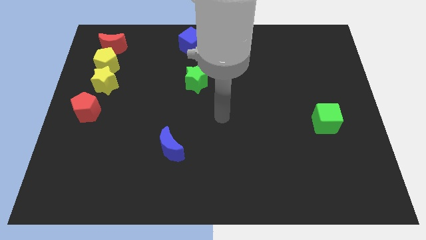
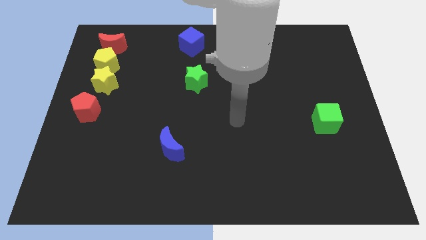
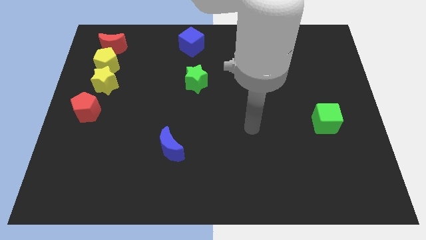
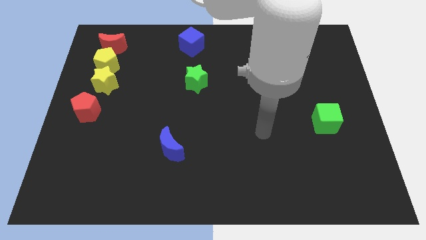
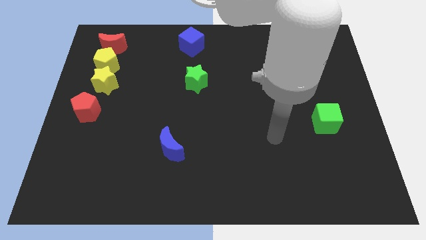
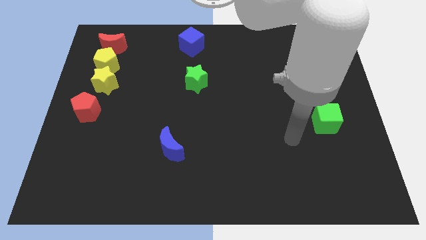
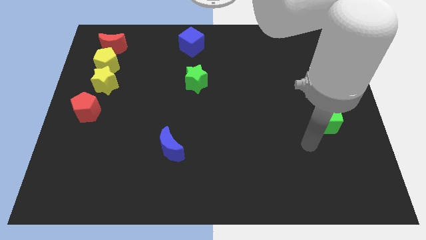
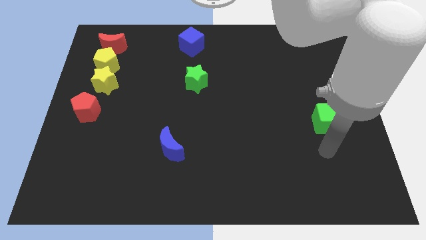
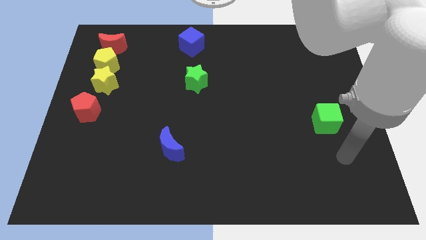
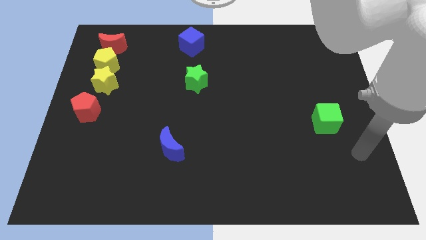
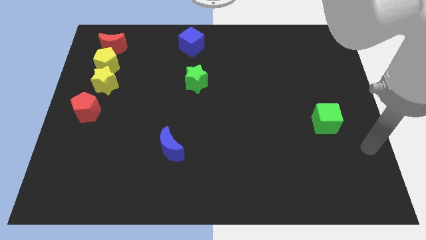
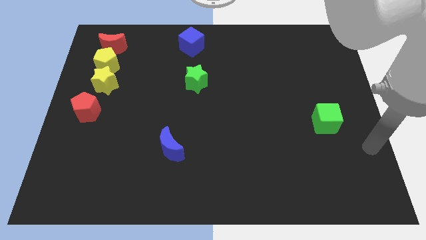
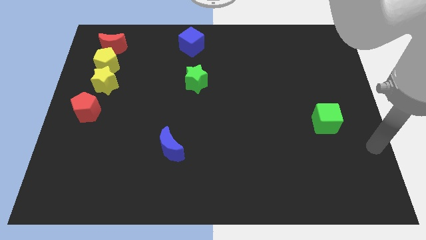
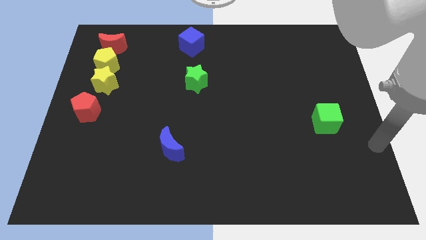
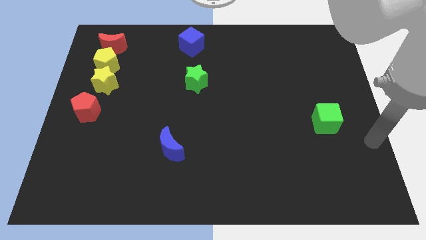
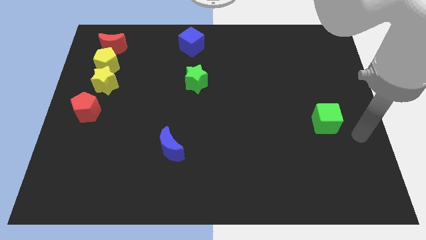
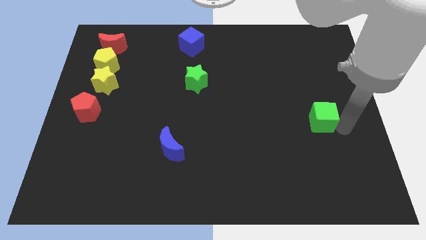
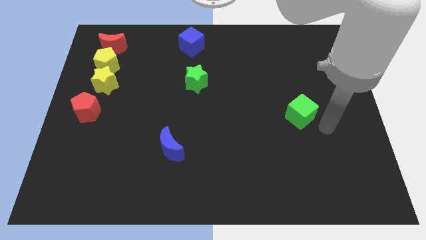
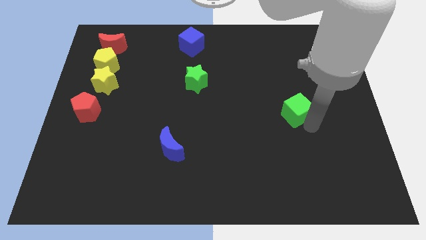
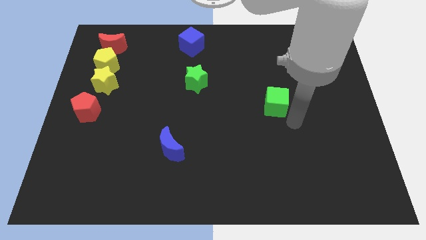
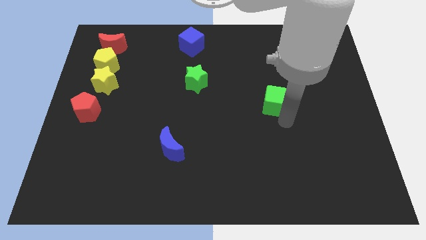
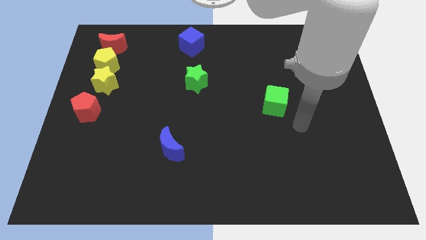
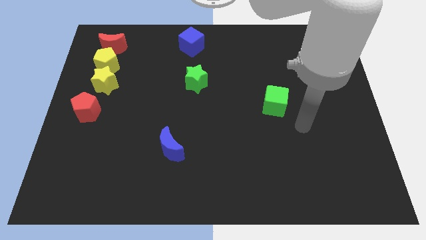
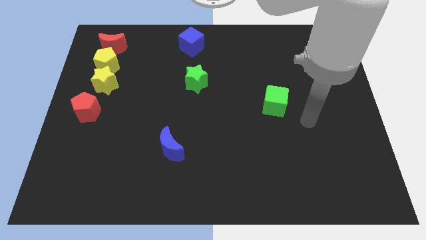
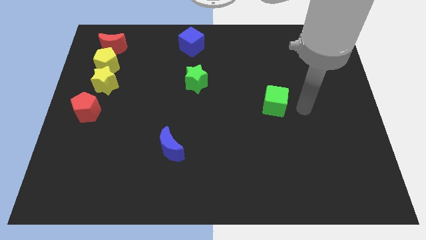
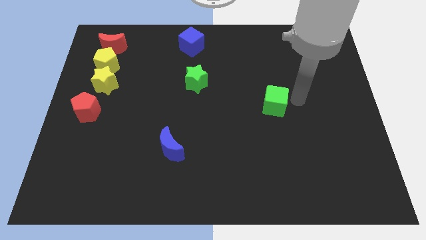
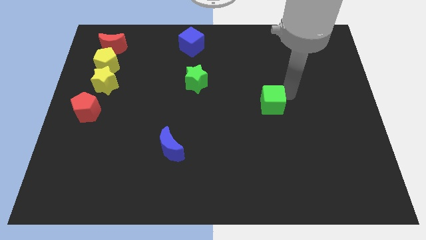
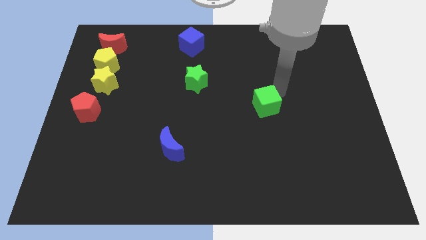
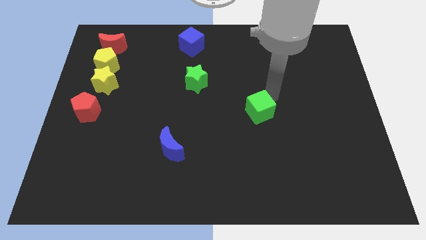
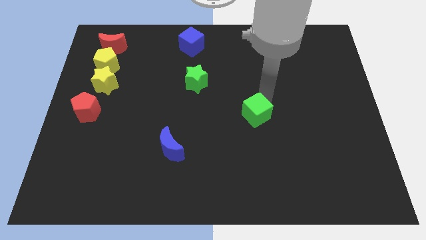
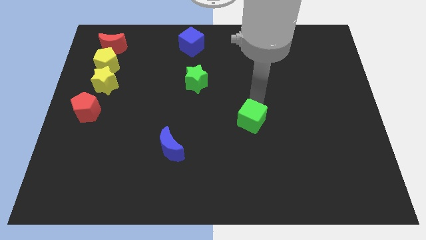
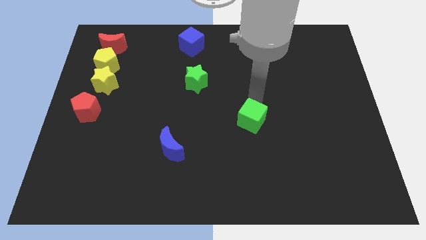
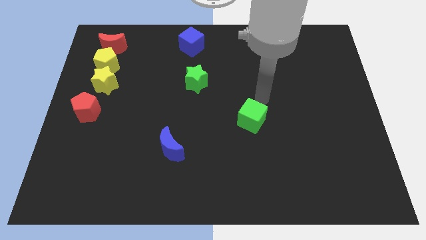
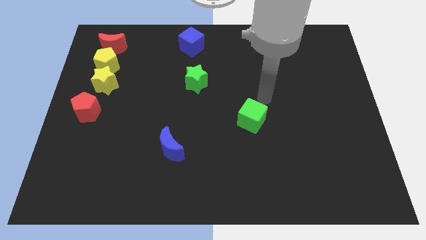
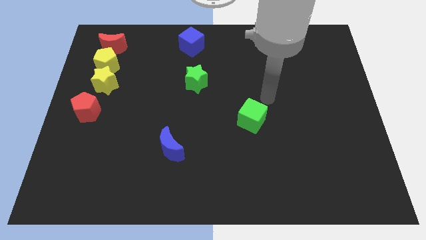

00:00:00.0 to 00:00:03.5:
move the greeen cube diagonal below green star

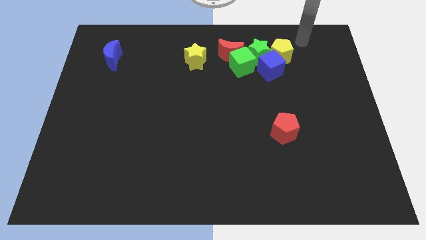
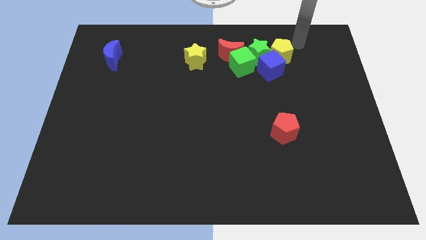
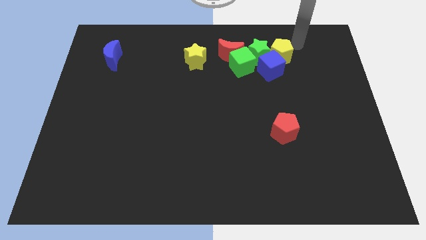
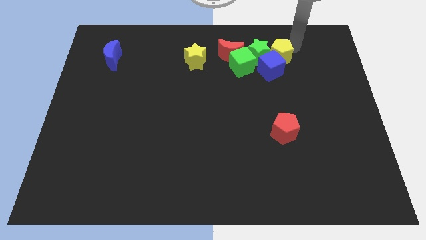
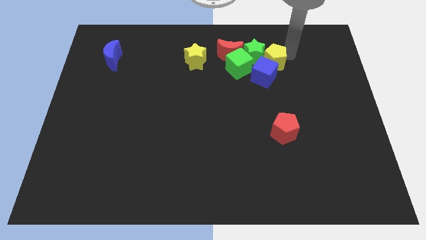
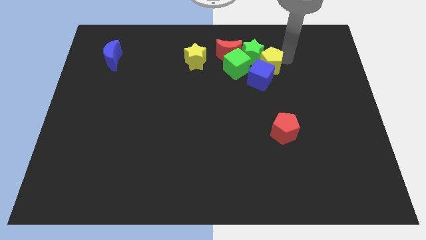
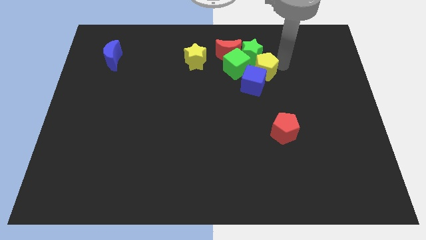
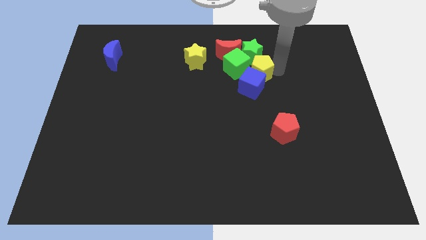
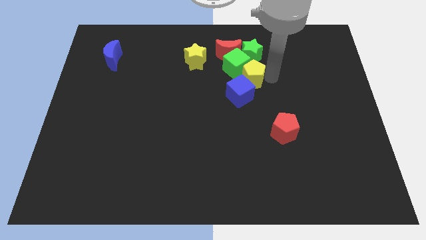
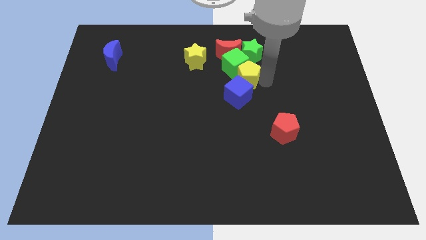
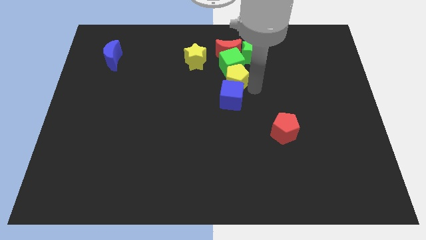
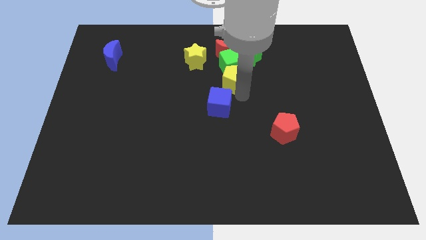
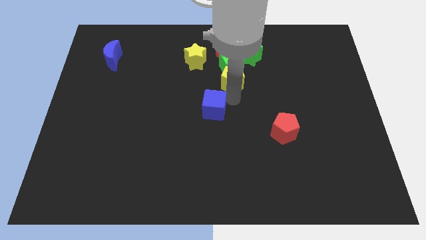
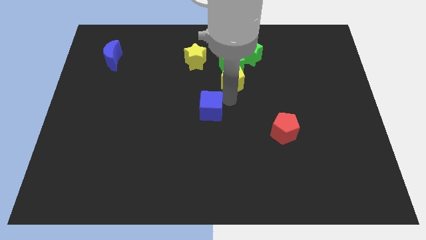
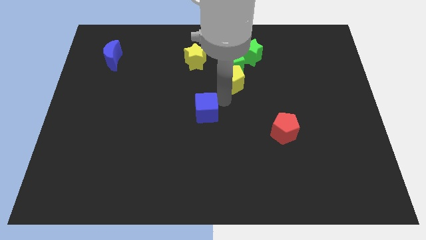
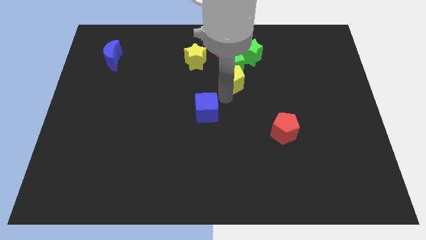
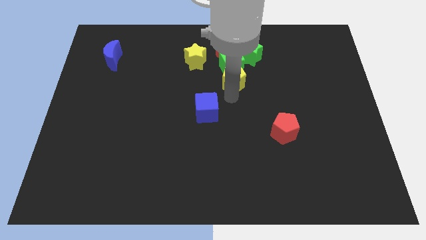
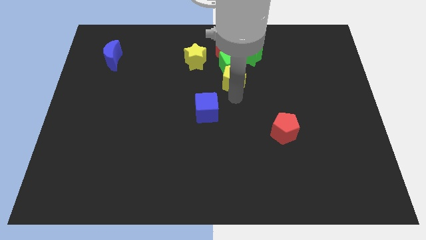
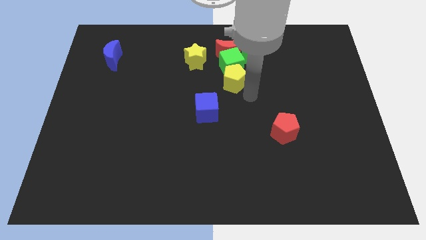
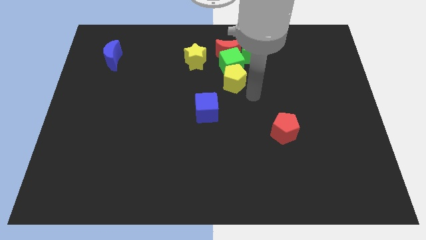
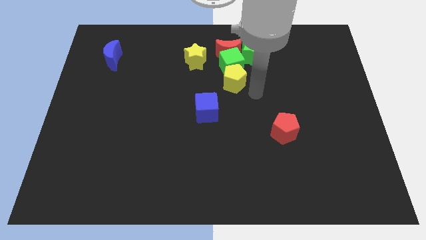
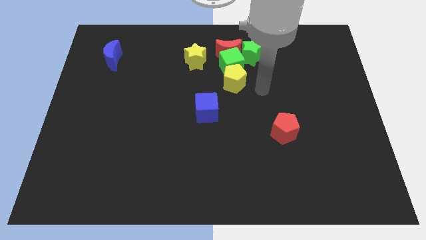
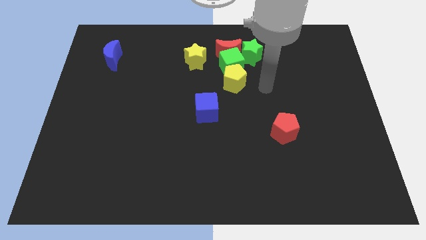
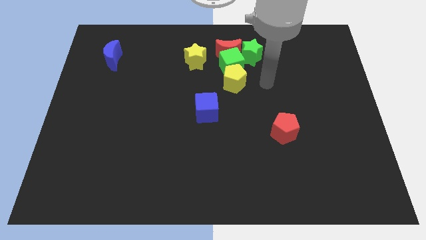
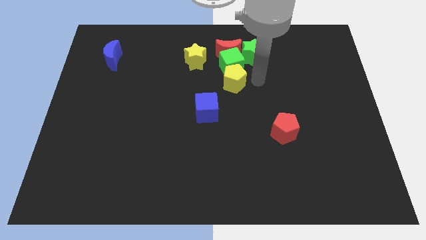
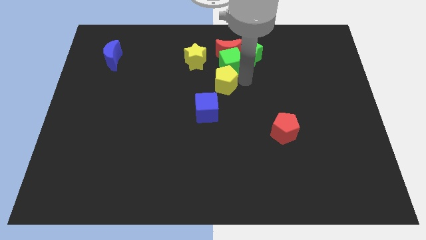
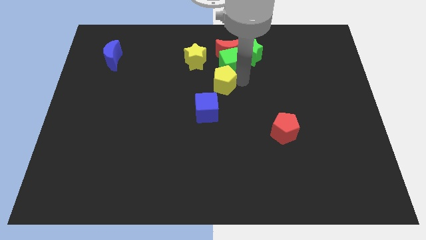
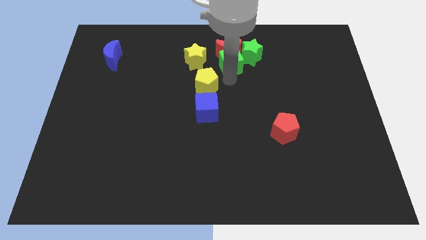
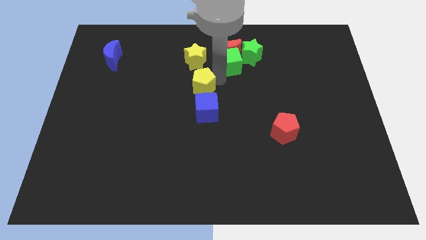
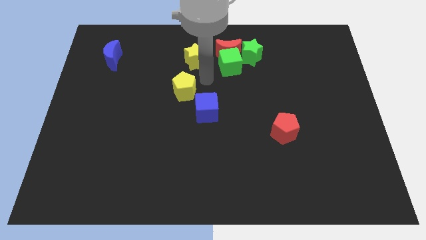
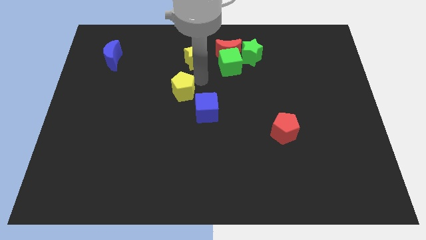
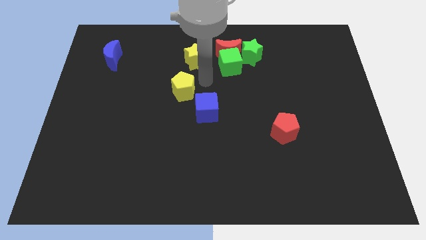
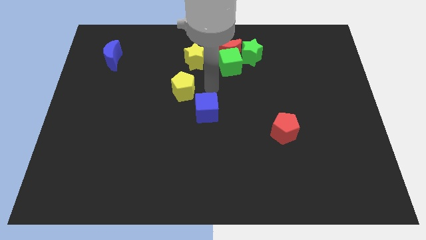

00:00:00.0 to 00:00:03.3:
place the yellow pentagon below the yellow star

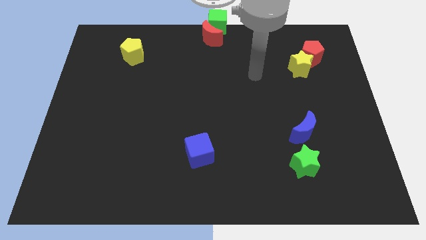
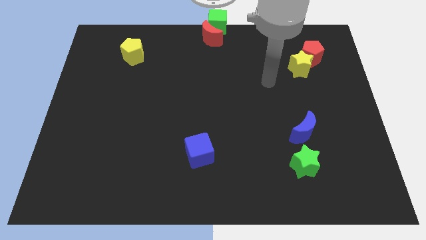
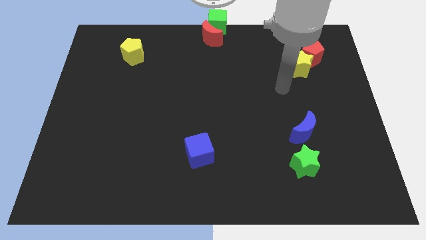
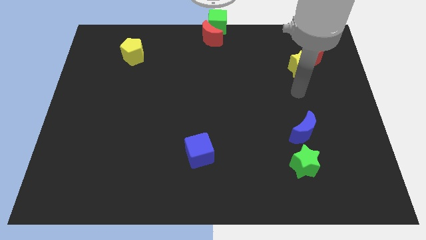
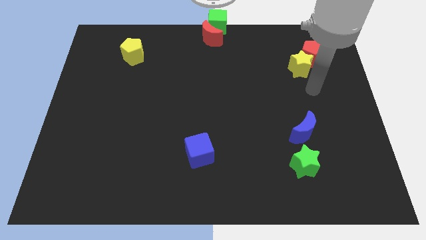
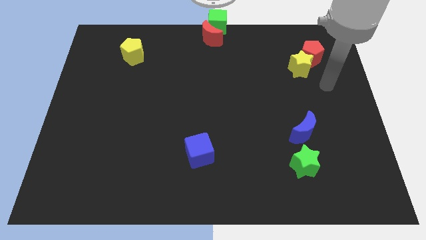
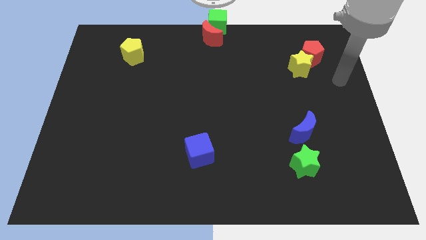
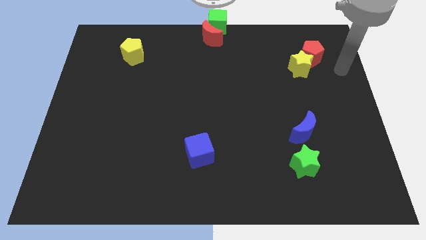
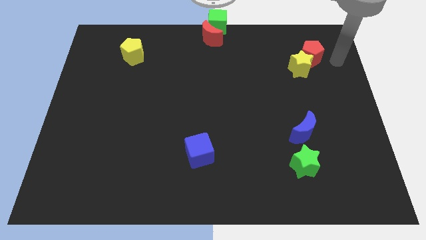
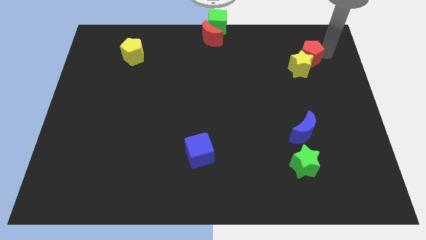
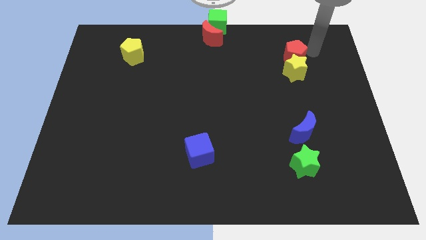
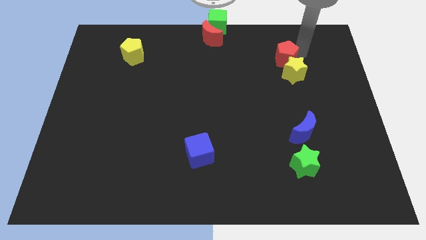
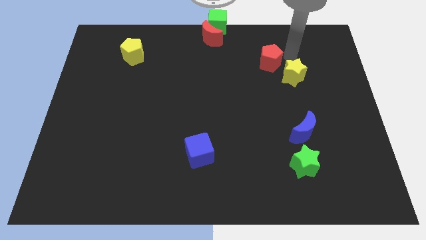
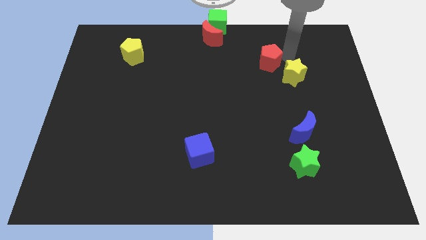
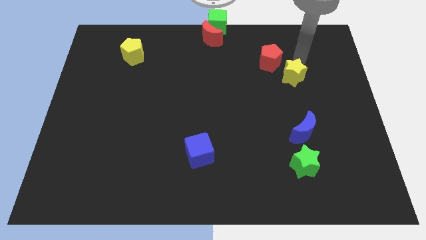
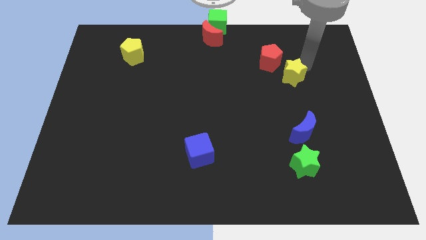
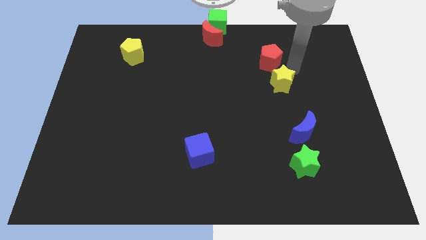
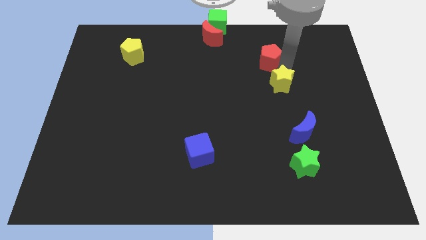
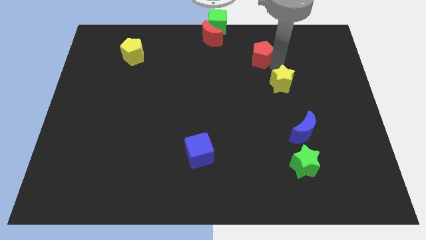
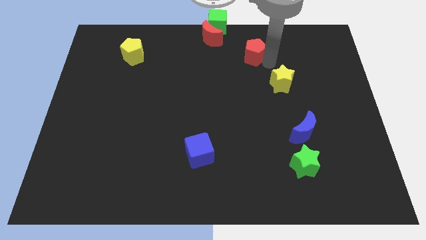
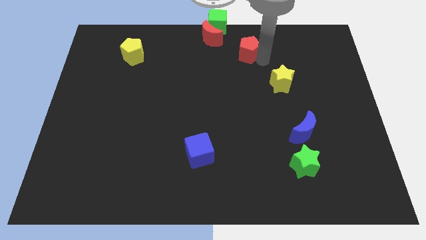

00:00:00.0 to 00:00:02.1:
separate the red pentagon and yellow star

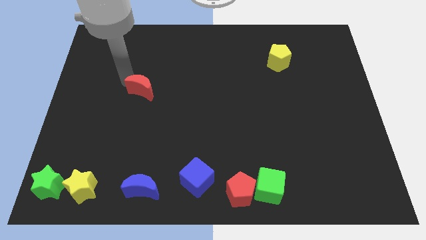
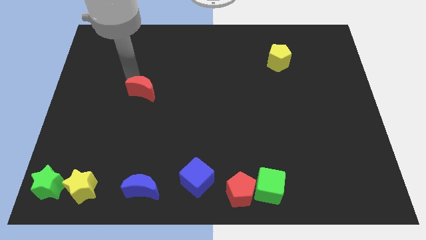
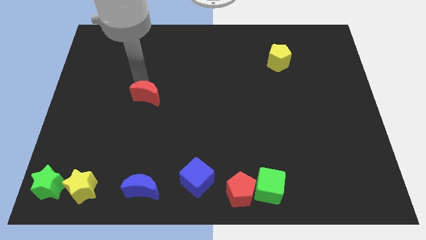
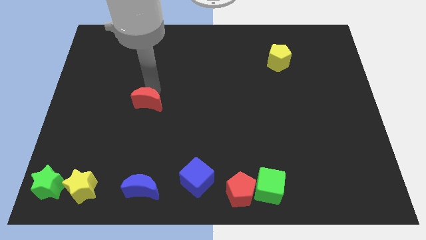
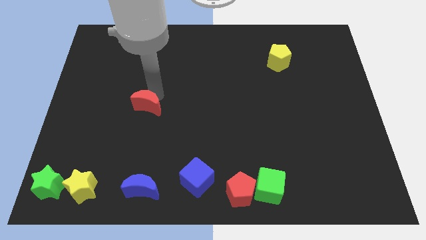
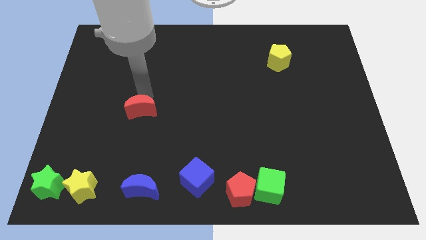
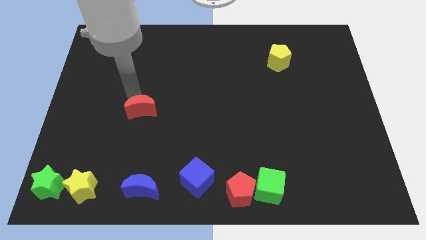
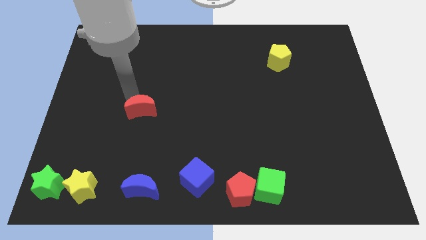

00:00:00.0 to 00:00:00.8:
place the red moon above the blue moon
